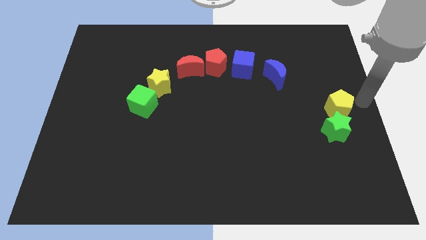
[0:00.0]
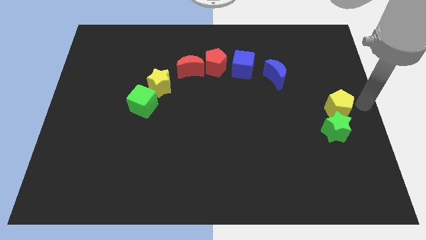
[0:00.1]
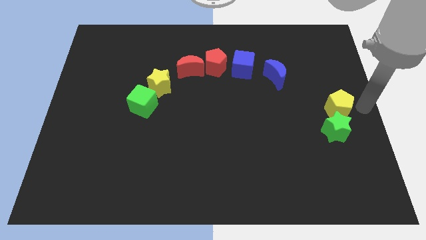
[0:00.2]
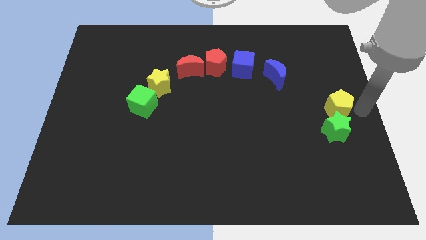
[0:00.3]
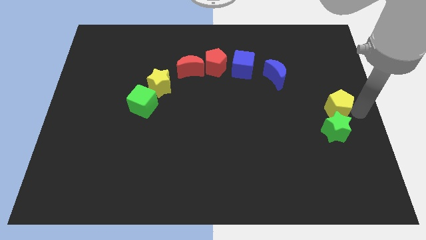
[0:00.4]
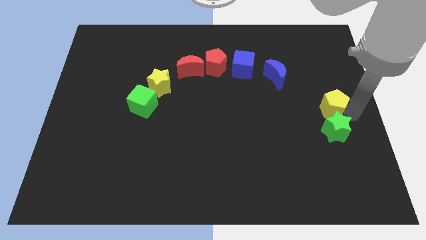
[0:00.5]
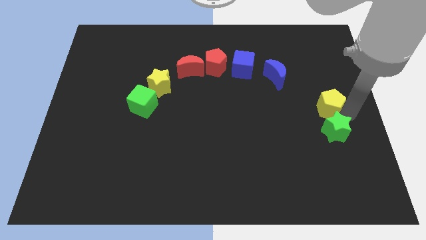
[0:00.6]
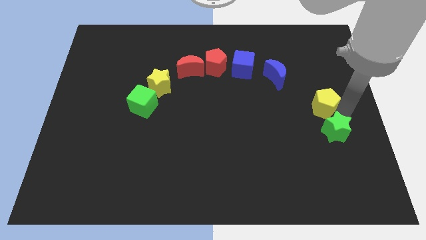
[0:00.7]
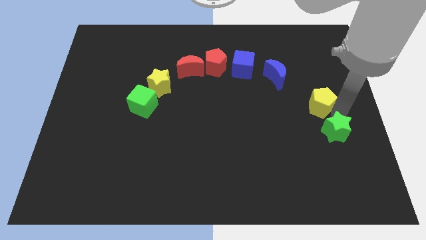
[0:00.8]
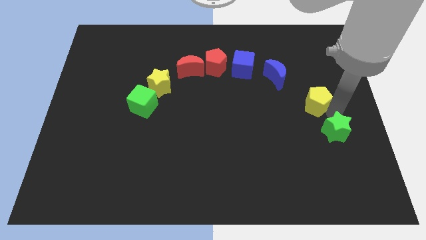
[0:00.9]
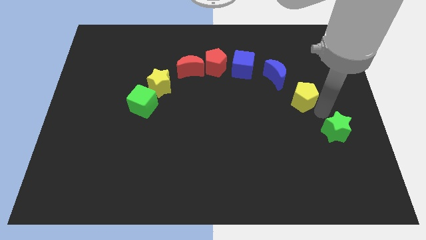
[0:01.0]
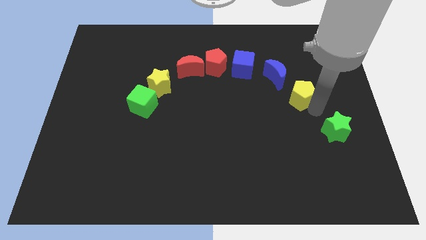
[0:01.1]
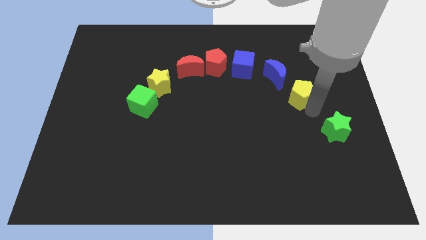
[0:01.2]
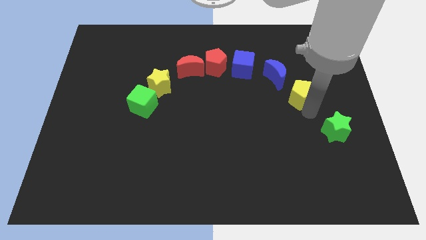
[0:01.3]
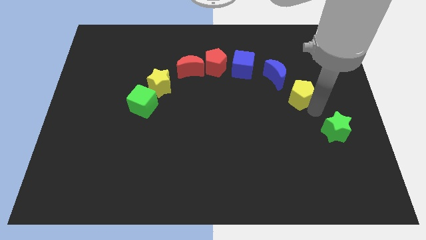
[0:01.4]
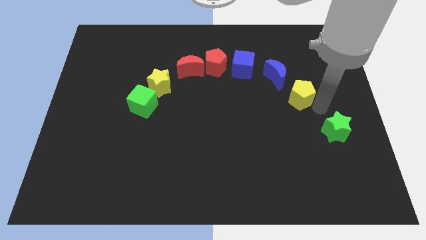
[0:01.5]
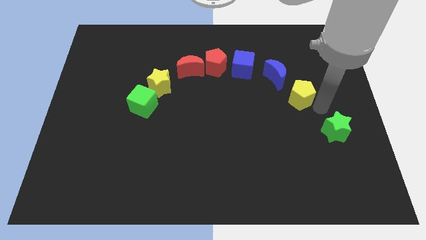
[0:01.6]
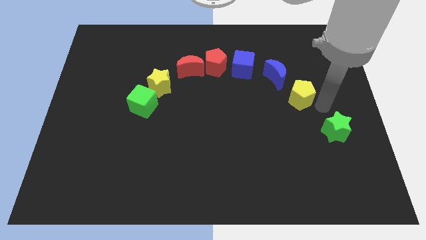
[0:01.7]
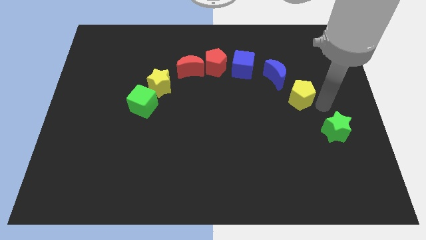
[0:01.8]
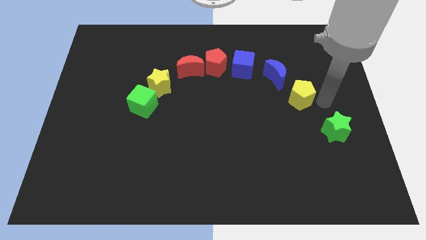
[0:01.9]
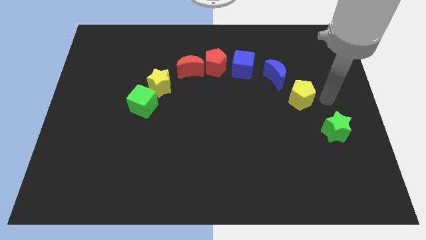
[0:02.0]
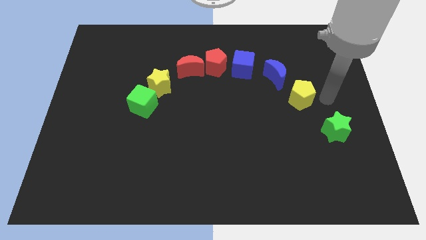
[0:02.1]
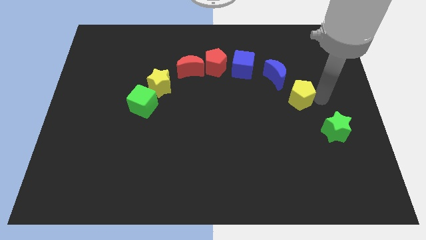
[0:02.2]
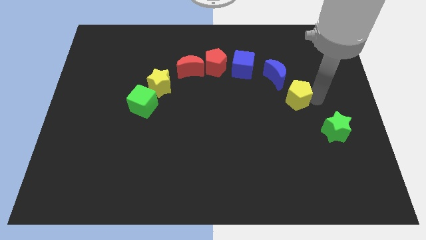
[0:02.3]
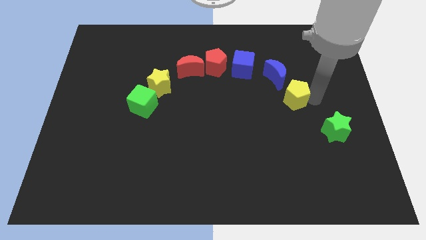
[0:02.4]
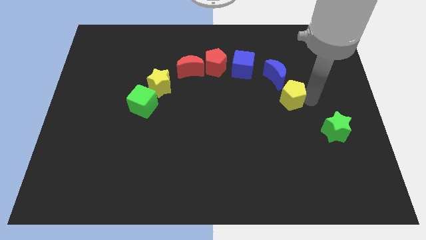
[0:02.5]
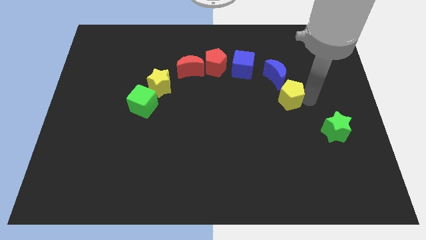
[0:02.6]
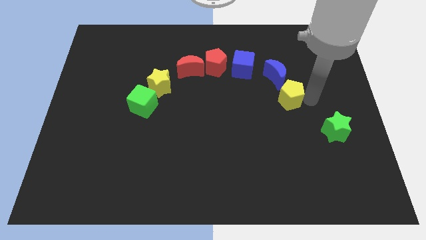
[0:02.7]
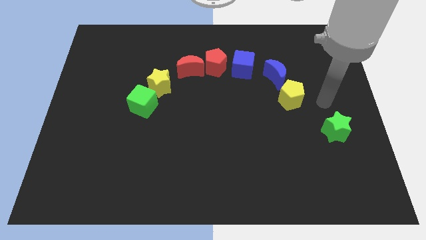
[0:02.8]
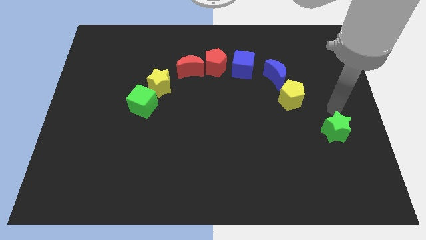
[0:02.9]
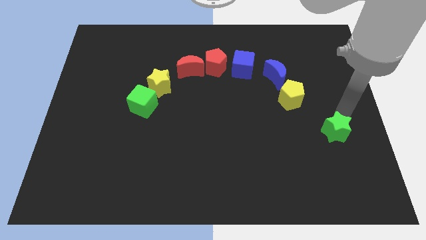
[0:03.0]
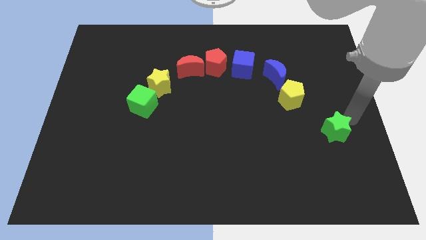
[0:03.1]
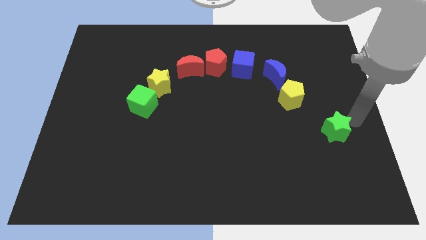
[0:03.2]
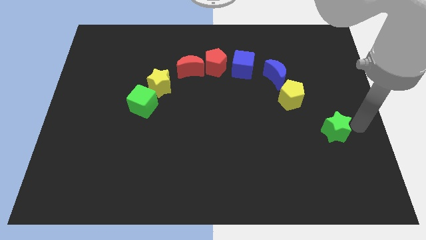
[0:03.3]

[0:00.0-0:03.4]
place yellow pentagon below blue moon

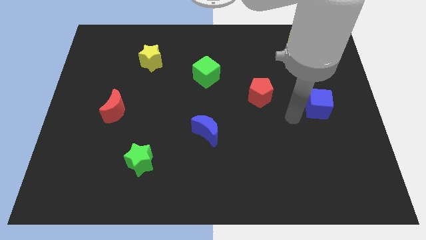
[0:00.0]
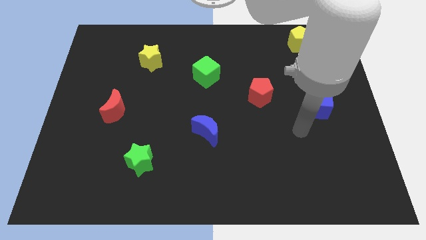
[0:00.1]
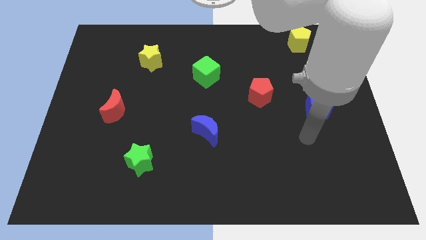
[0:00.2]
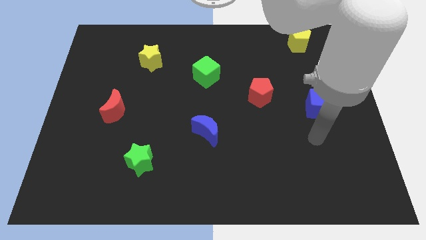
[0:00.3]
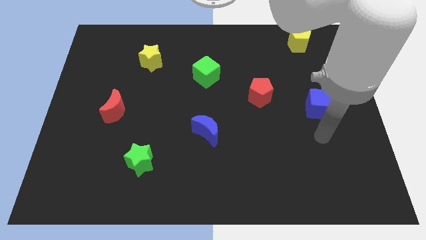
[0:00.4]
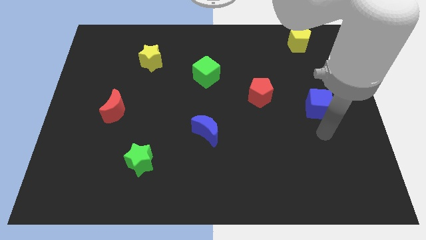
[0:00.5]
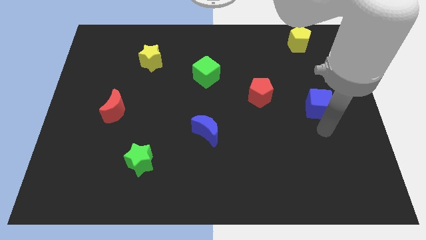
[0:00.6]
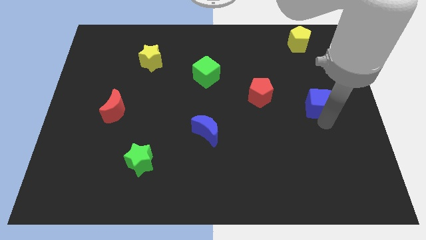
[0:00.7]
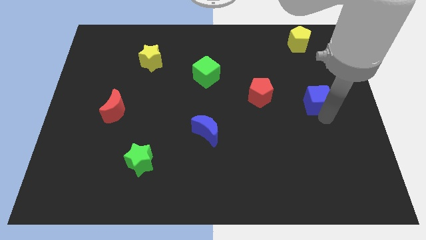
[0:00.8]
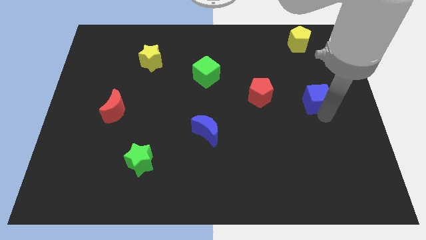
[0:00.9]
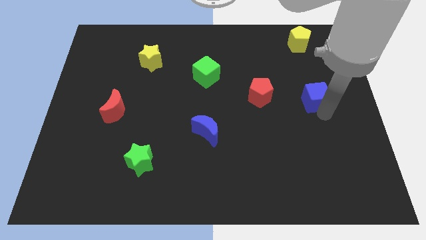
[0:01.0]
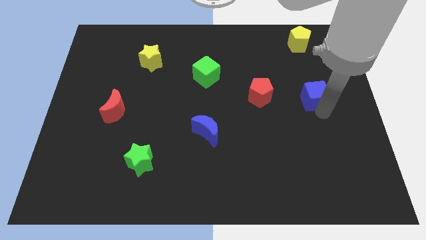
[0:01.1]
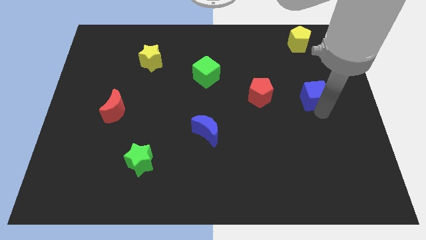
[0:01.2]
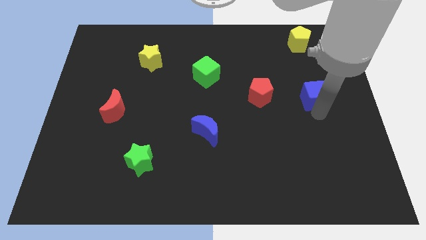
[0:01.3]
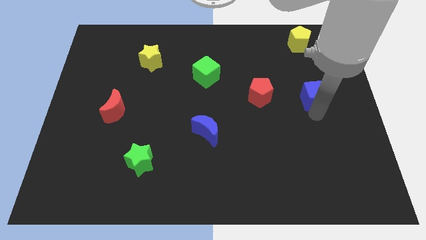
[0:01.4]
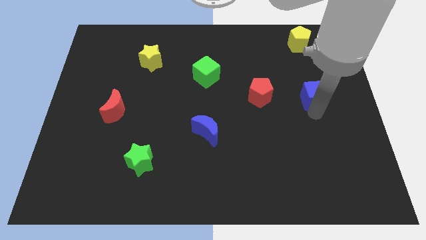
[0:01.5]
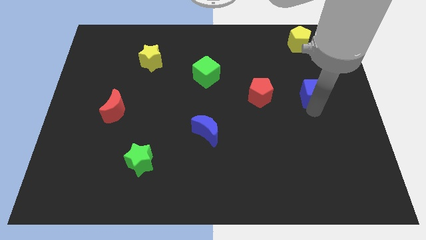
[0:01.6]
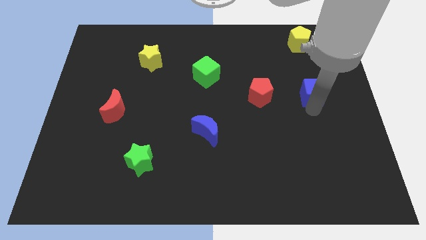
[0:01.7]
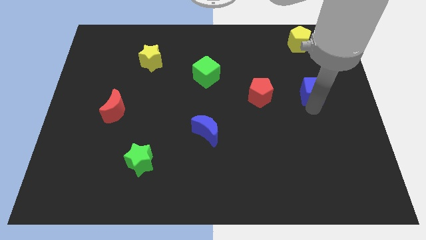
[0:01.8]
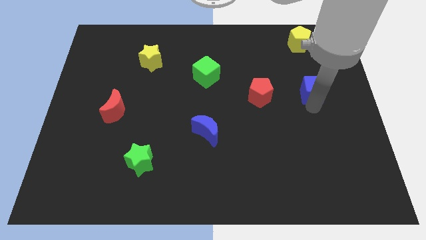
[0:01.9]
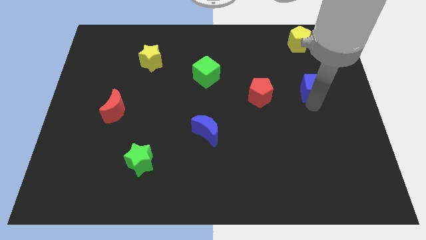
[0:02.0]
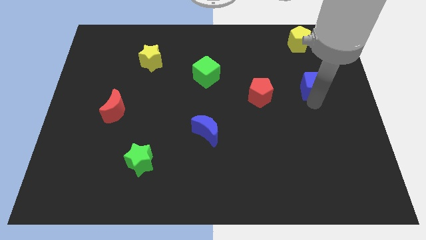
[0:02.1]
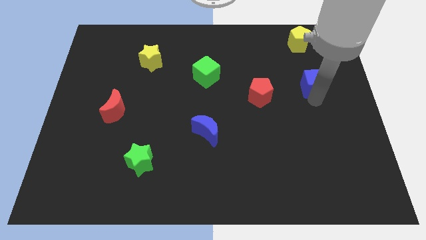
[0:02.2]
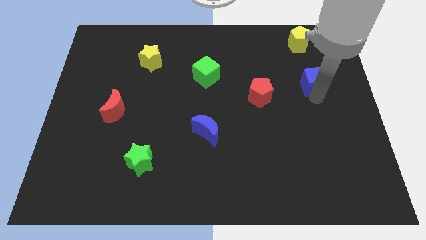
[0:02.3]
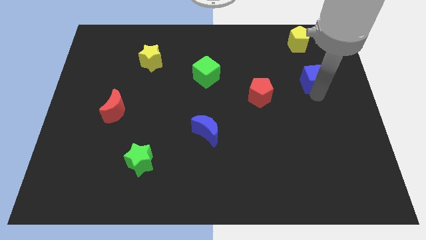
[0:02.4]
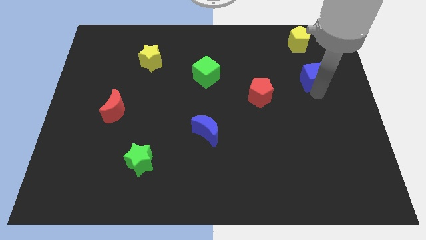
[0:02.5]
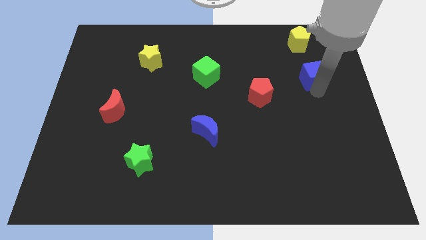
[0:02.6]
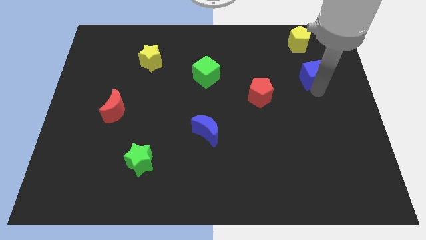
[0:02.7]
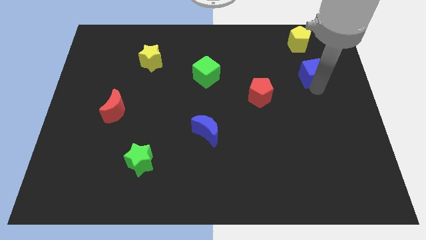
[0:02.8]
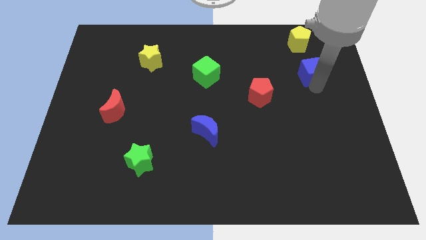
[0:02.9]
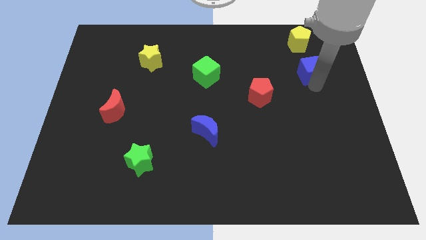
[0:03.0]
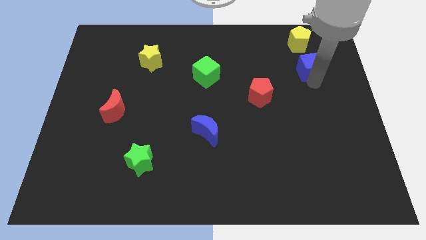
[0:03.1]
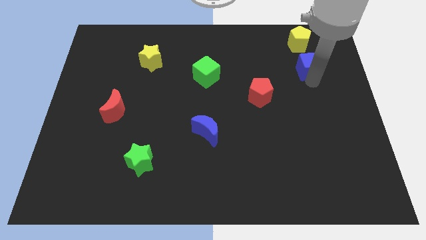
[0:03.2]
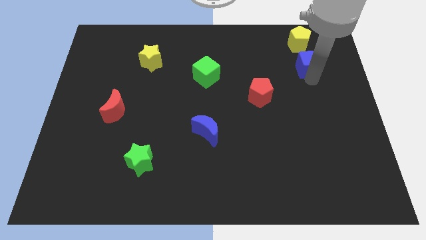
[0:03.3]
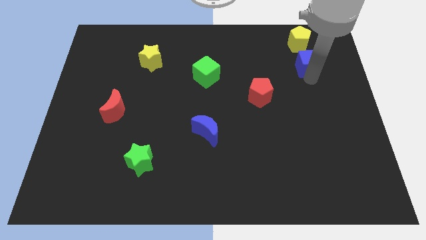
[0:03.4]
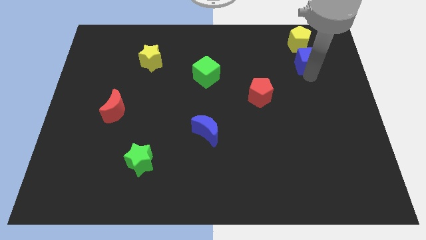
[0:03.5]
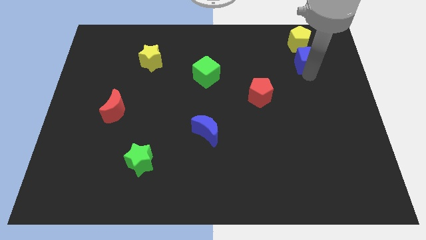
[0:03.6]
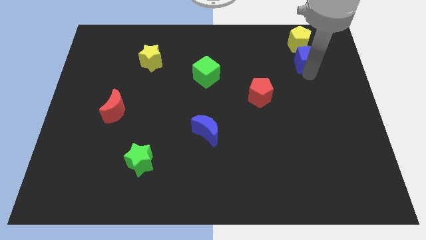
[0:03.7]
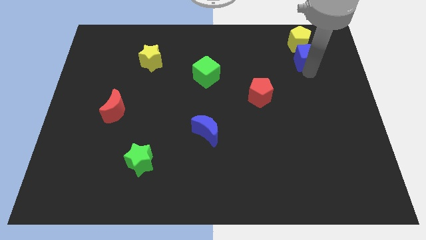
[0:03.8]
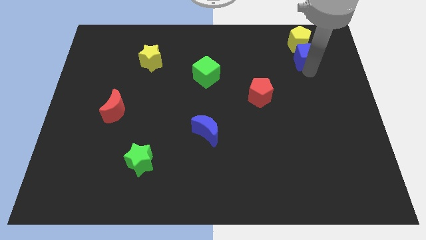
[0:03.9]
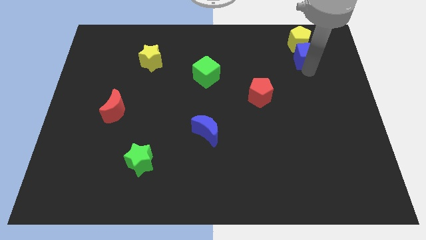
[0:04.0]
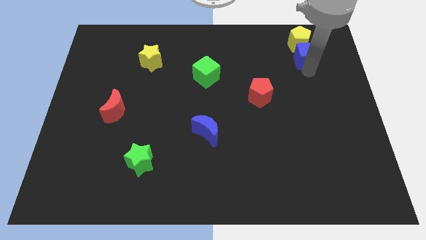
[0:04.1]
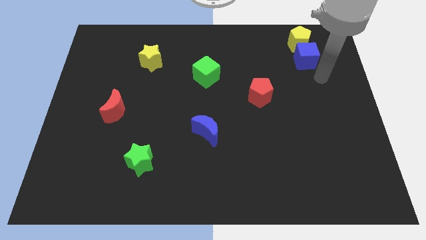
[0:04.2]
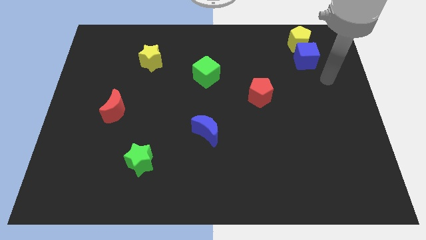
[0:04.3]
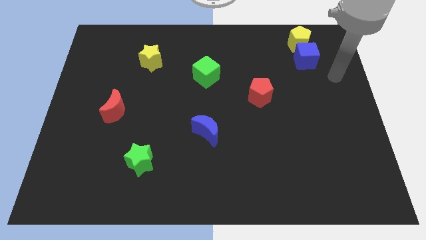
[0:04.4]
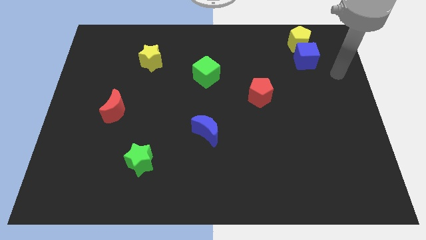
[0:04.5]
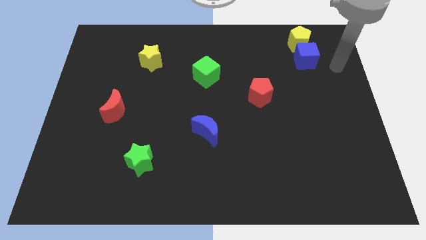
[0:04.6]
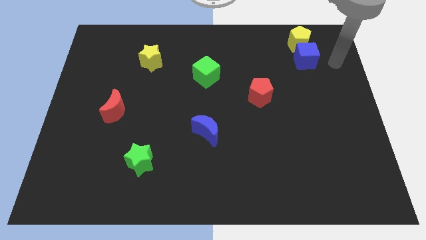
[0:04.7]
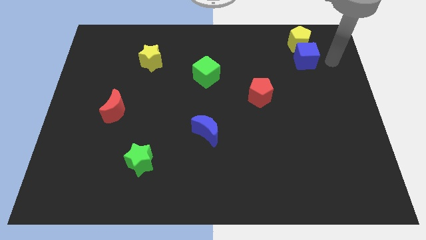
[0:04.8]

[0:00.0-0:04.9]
place blue cube below yellow pentagon

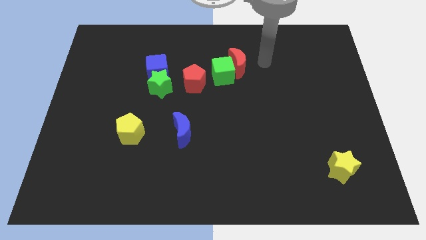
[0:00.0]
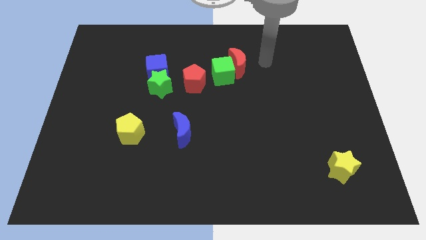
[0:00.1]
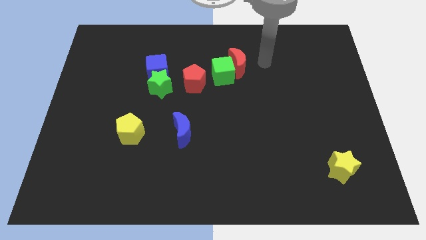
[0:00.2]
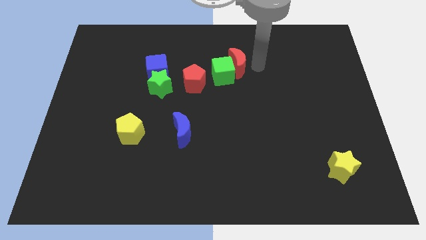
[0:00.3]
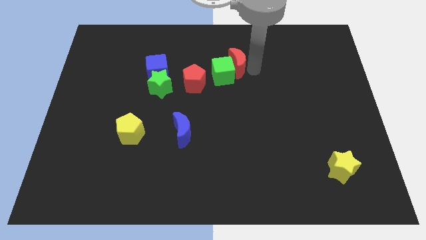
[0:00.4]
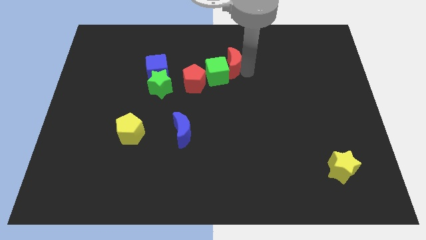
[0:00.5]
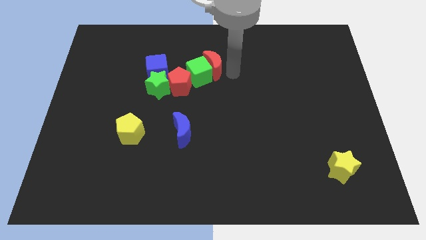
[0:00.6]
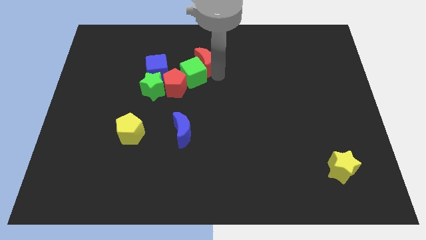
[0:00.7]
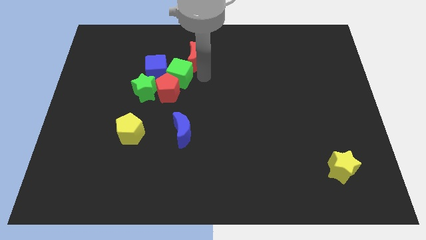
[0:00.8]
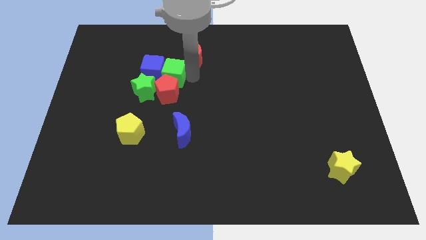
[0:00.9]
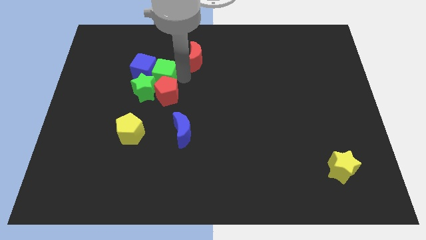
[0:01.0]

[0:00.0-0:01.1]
push green cube into blue cube
